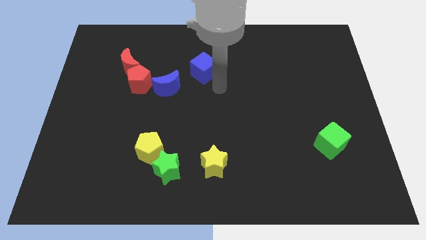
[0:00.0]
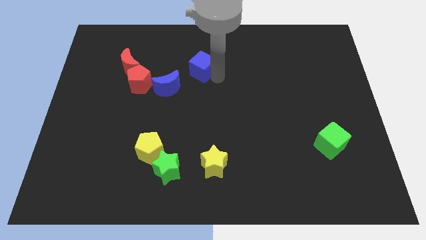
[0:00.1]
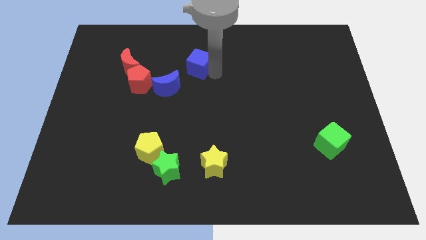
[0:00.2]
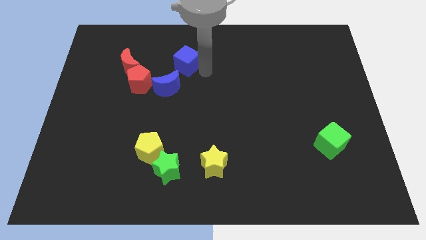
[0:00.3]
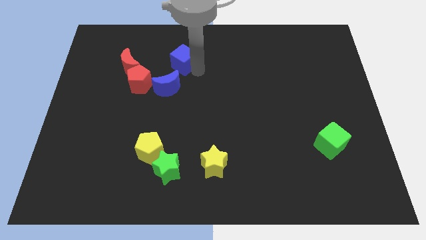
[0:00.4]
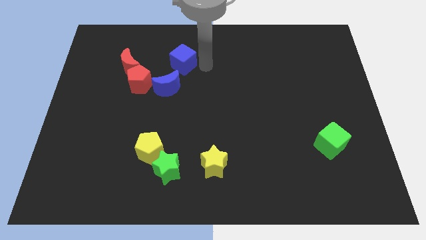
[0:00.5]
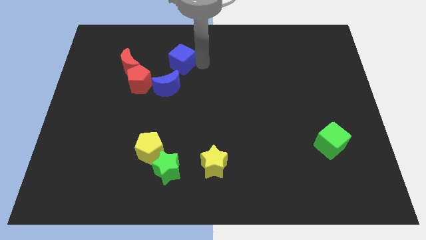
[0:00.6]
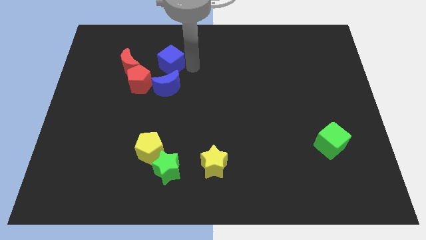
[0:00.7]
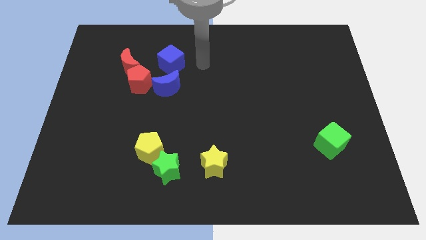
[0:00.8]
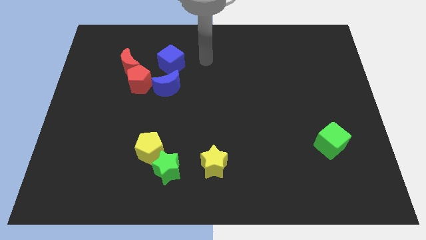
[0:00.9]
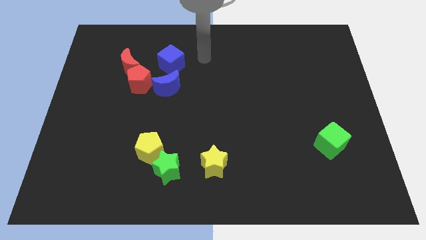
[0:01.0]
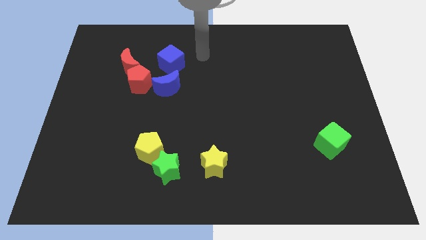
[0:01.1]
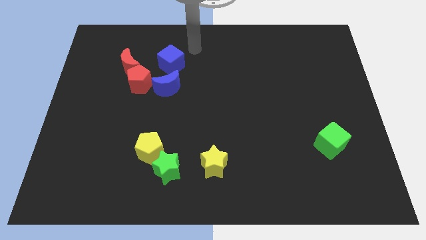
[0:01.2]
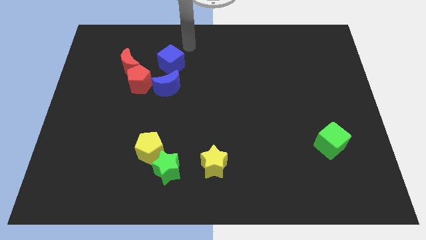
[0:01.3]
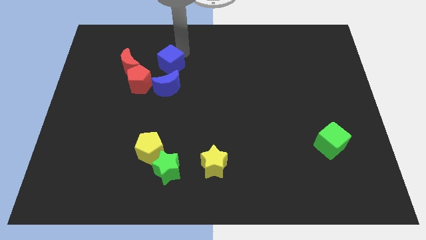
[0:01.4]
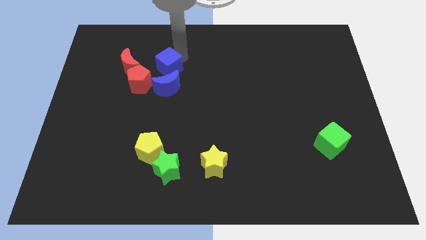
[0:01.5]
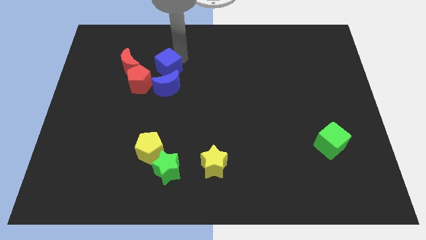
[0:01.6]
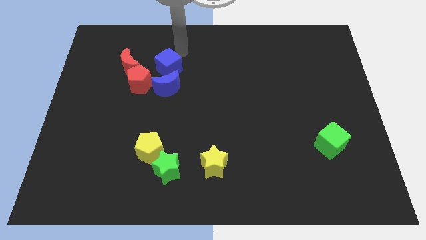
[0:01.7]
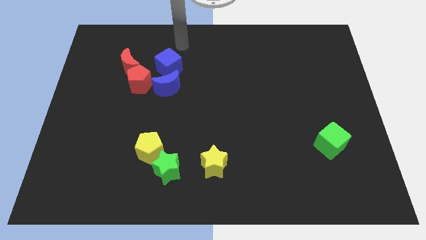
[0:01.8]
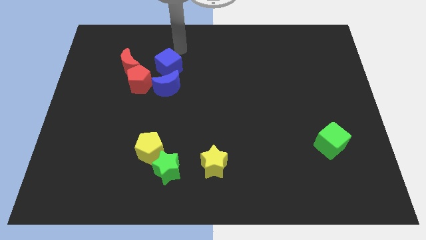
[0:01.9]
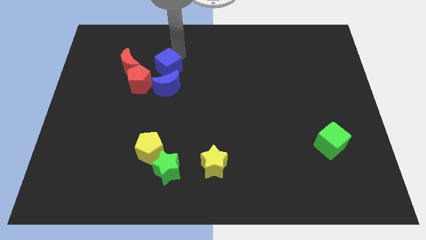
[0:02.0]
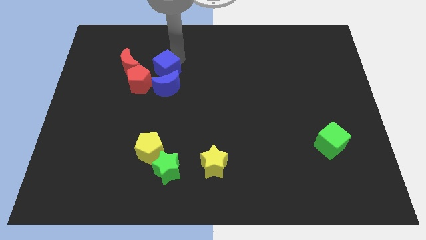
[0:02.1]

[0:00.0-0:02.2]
slide the blue cube above the blue moon

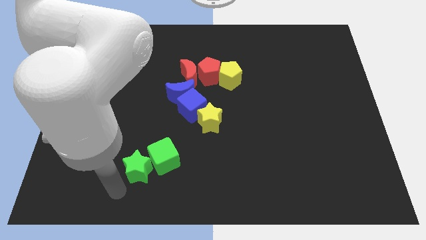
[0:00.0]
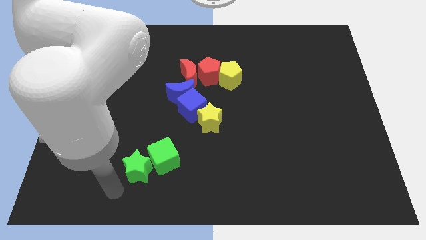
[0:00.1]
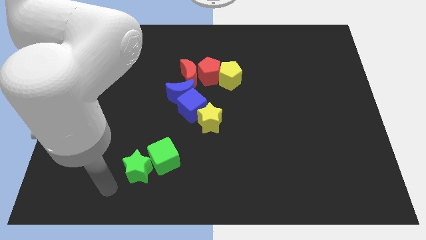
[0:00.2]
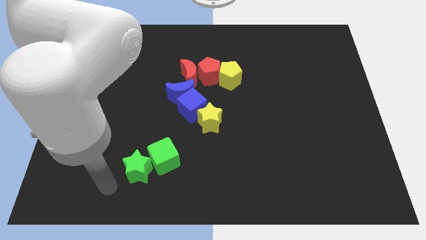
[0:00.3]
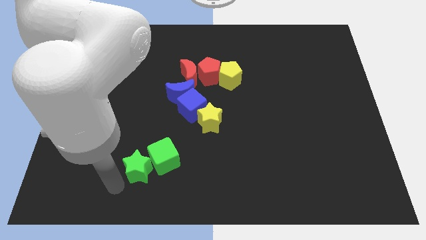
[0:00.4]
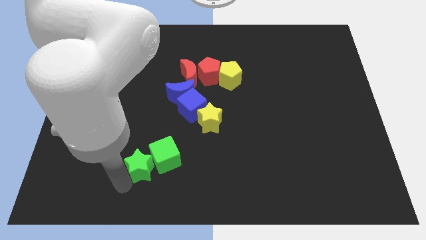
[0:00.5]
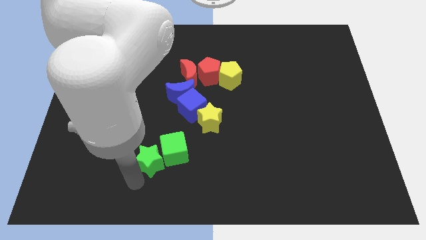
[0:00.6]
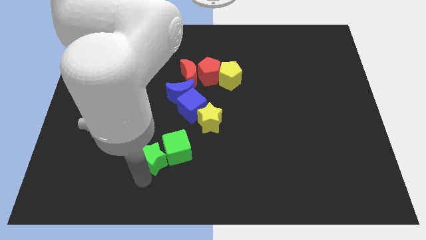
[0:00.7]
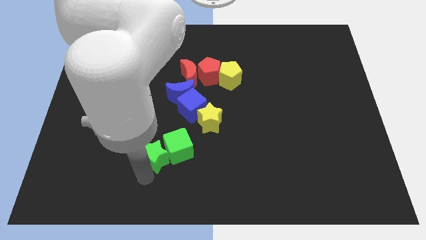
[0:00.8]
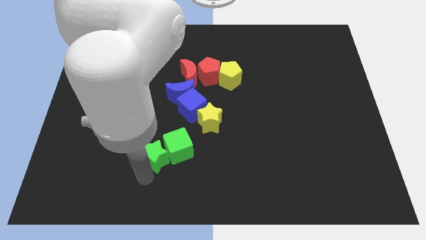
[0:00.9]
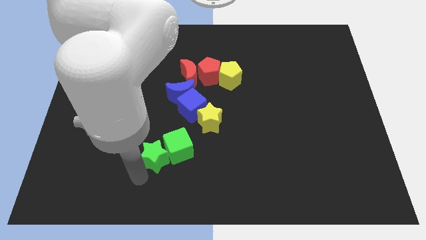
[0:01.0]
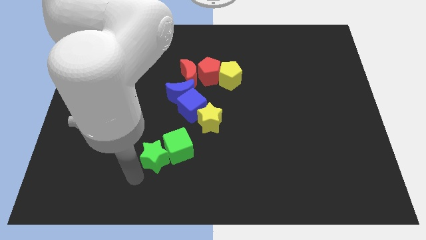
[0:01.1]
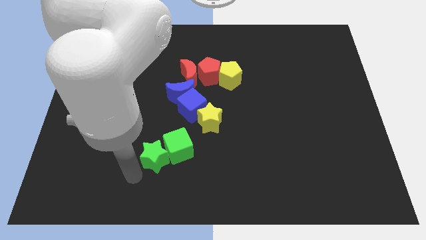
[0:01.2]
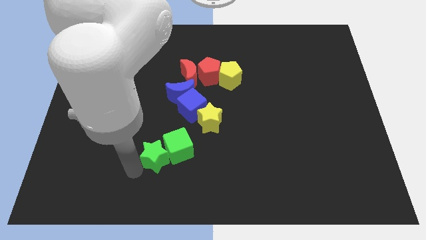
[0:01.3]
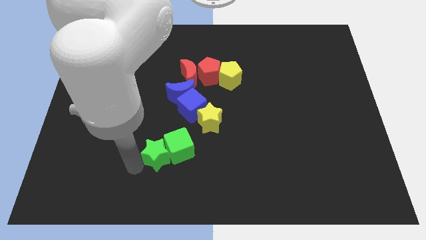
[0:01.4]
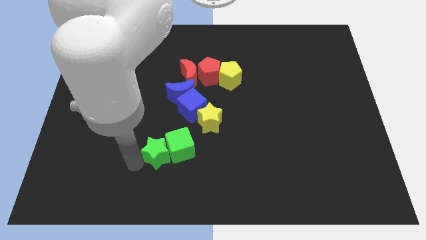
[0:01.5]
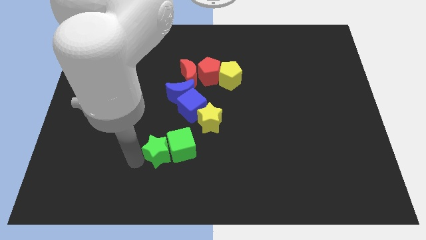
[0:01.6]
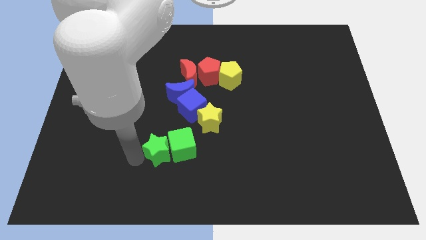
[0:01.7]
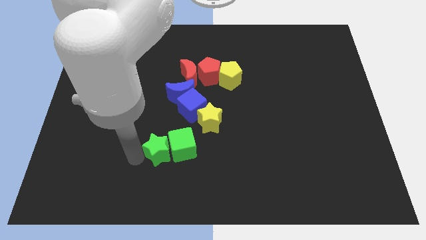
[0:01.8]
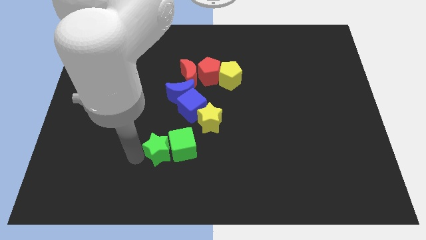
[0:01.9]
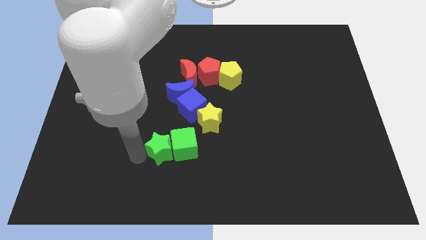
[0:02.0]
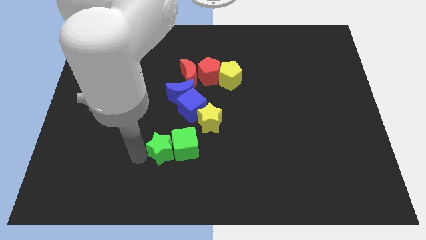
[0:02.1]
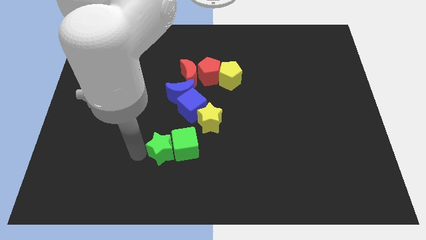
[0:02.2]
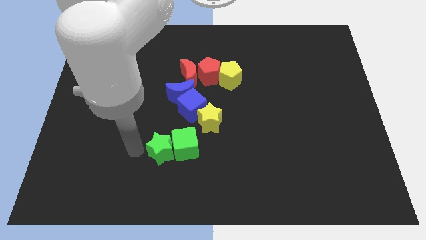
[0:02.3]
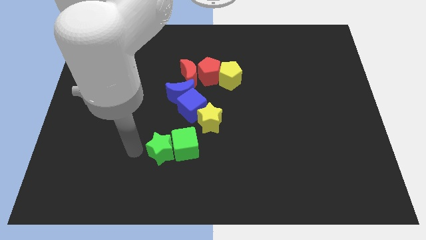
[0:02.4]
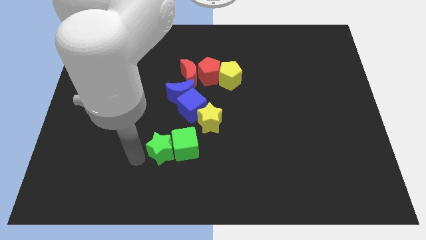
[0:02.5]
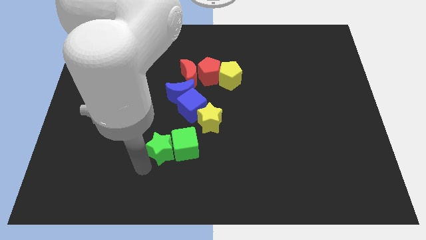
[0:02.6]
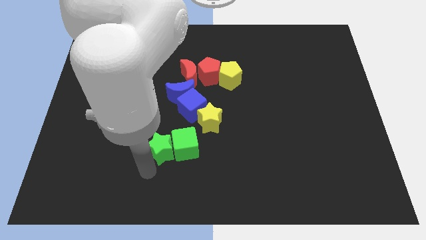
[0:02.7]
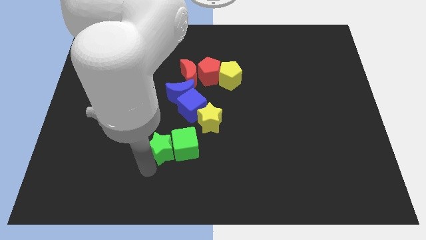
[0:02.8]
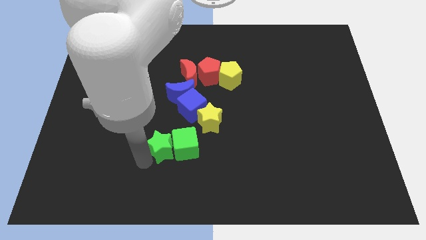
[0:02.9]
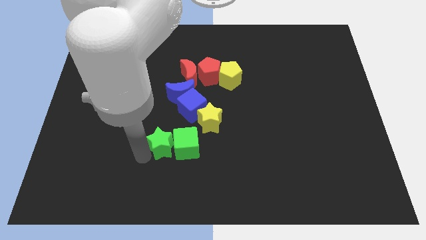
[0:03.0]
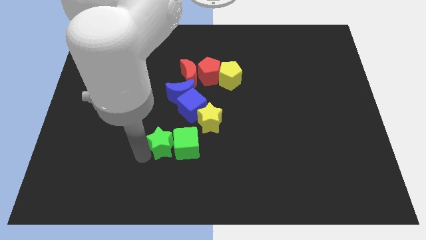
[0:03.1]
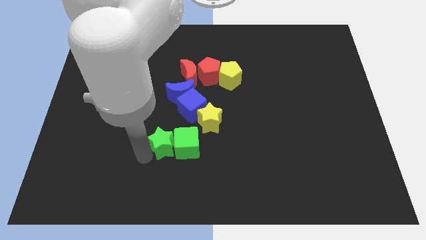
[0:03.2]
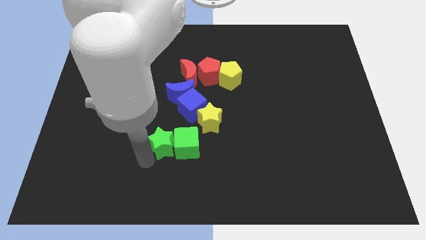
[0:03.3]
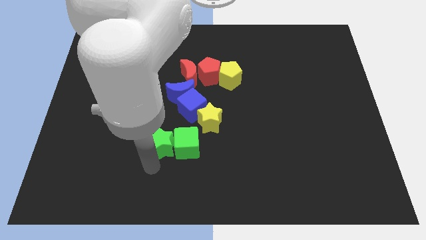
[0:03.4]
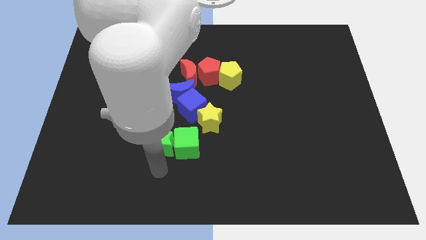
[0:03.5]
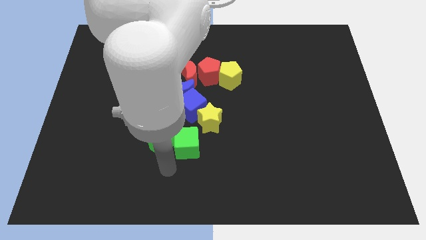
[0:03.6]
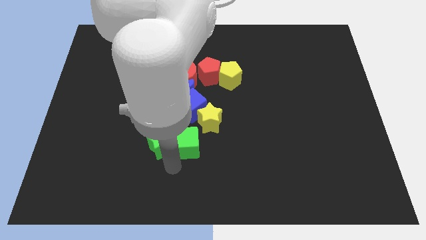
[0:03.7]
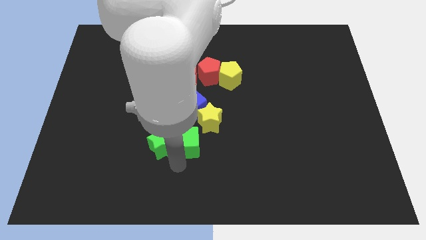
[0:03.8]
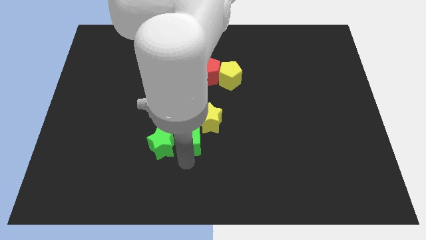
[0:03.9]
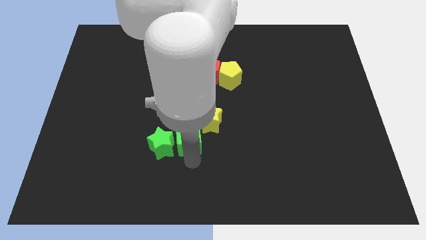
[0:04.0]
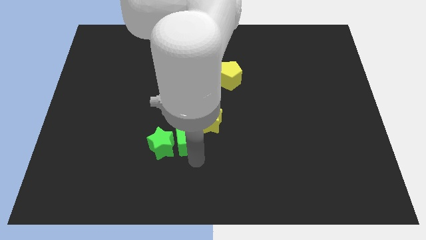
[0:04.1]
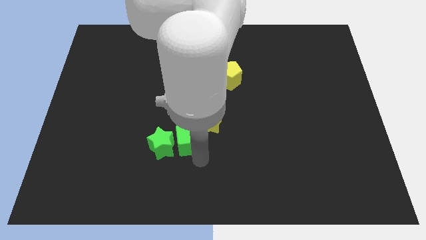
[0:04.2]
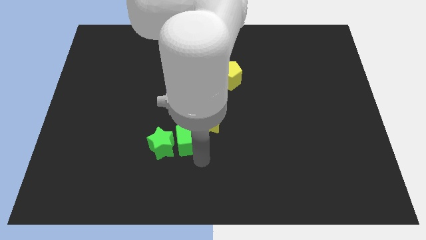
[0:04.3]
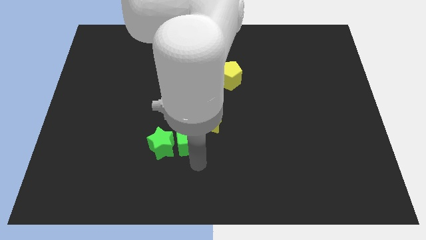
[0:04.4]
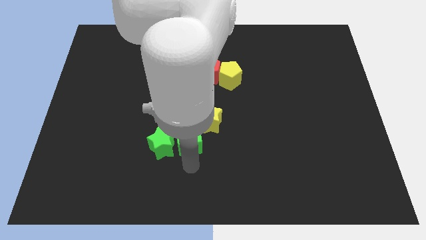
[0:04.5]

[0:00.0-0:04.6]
push green star along with green block towards the group of blocks

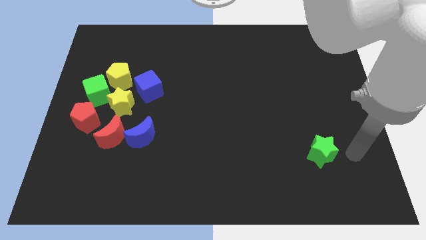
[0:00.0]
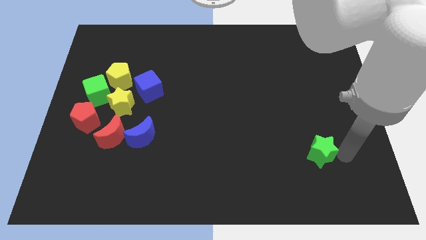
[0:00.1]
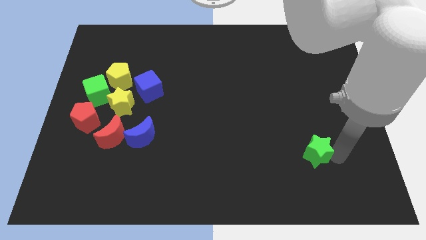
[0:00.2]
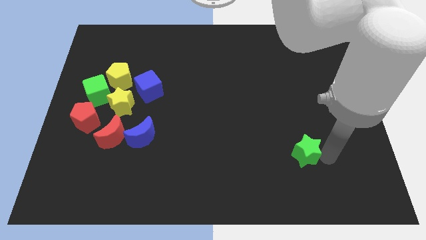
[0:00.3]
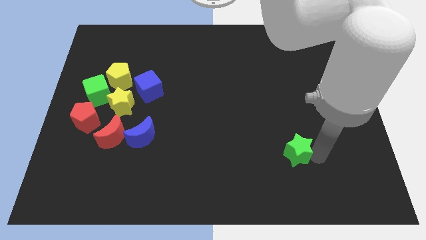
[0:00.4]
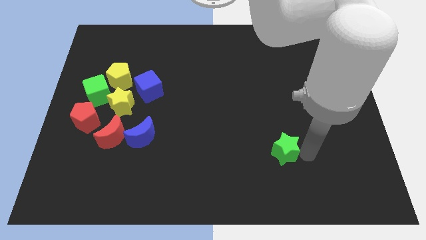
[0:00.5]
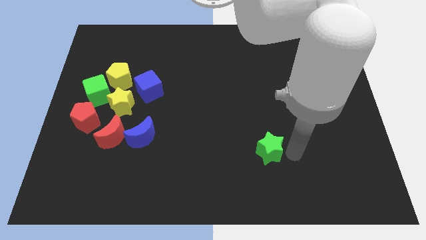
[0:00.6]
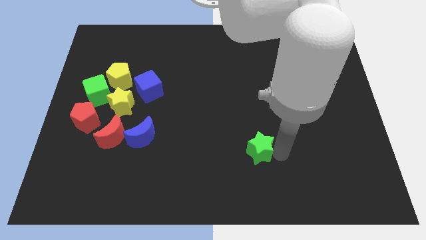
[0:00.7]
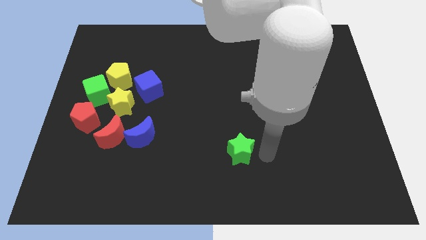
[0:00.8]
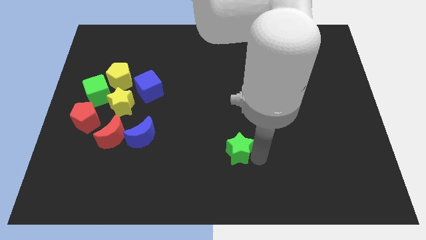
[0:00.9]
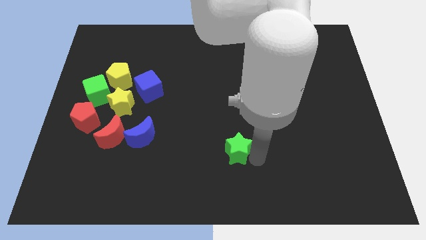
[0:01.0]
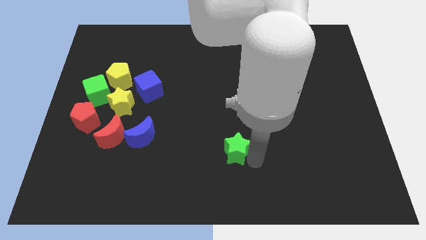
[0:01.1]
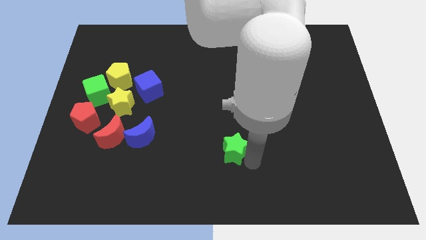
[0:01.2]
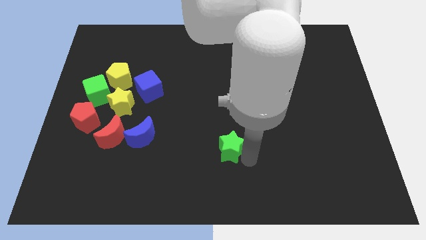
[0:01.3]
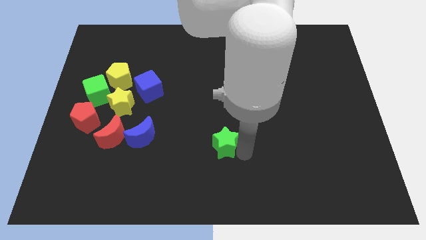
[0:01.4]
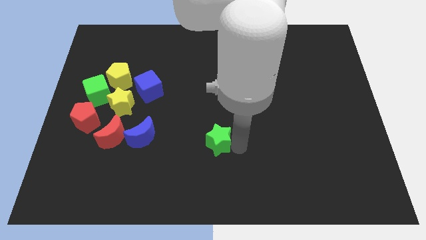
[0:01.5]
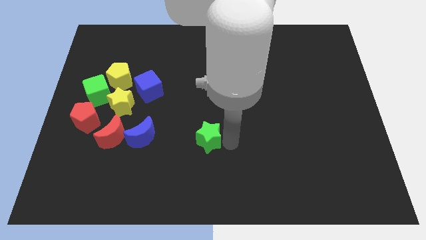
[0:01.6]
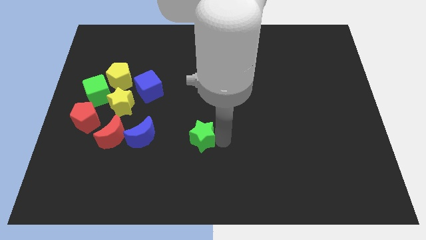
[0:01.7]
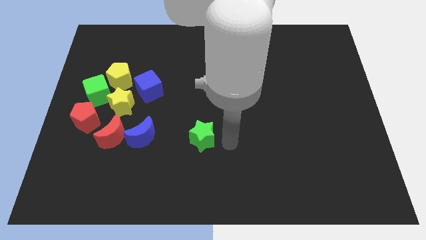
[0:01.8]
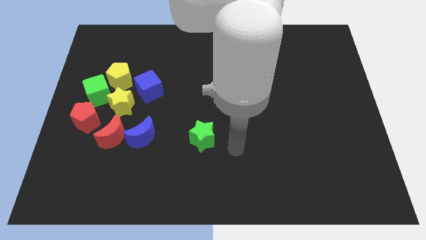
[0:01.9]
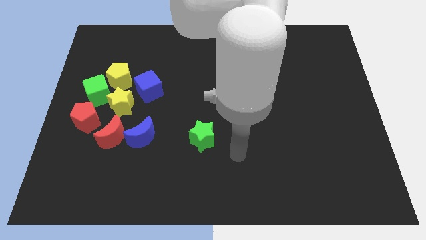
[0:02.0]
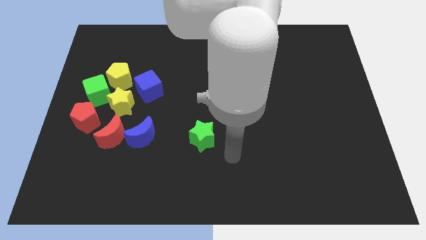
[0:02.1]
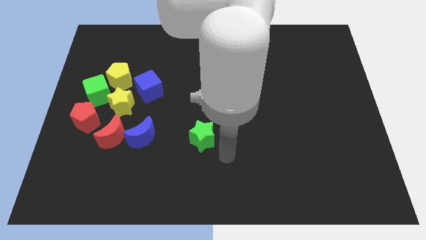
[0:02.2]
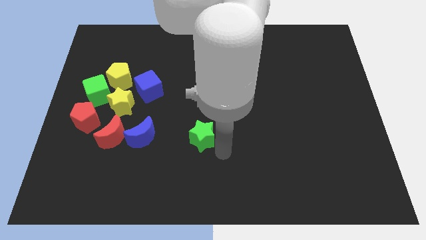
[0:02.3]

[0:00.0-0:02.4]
place the green star parallel to blue moon
